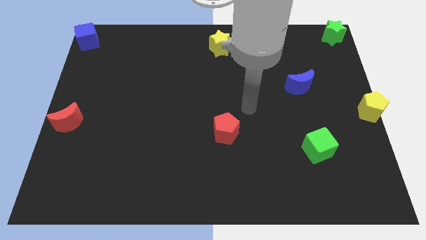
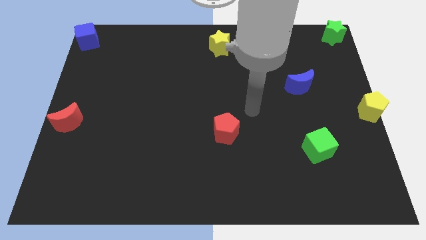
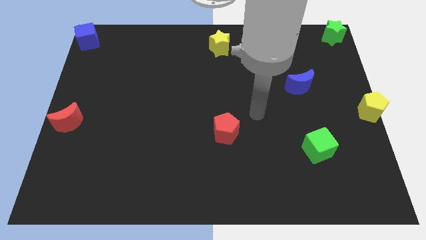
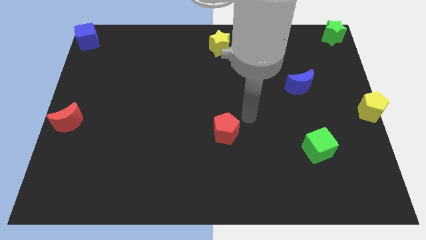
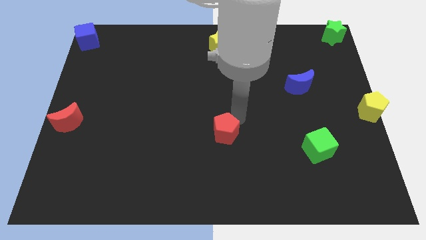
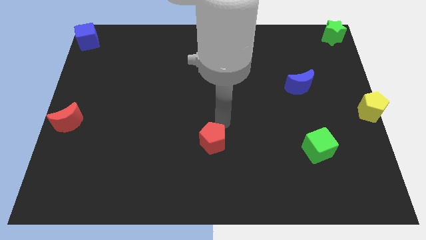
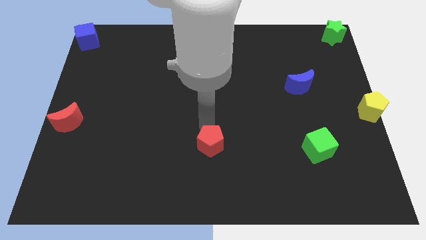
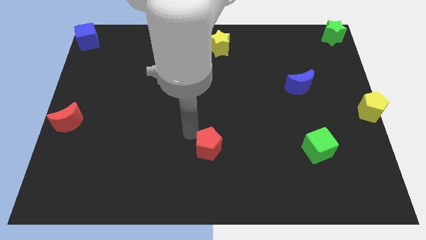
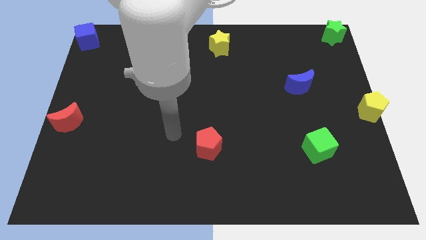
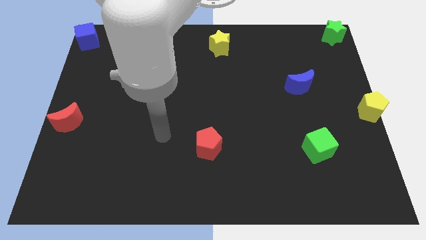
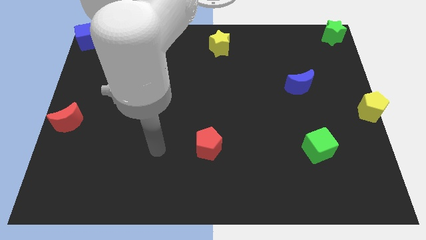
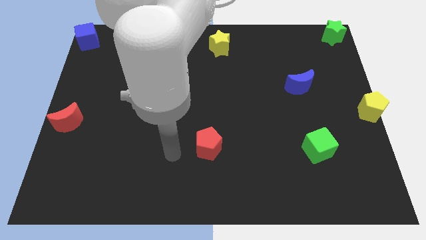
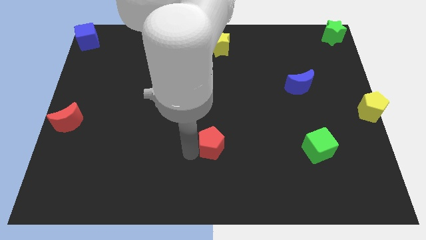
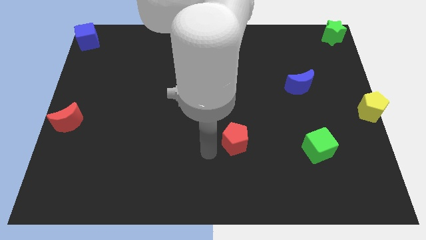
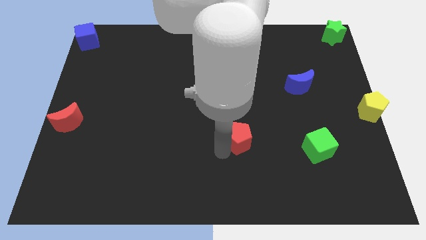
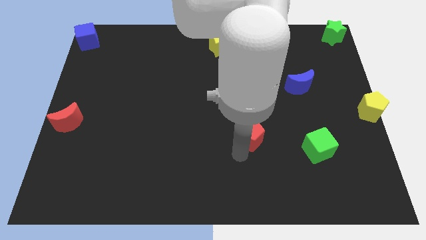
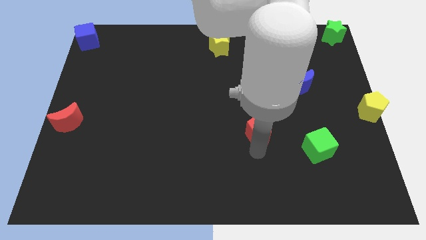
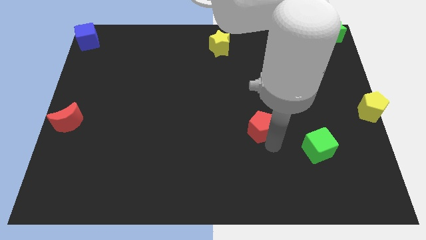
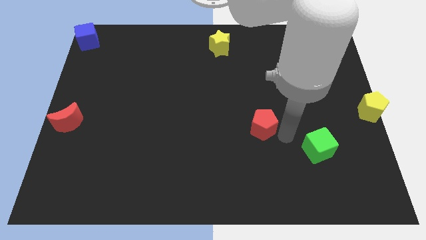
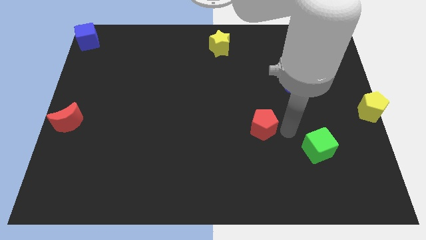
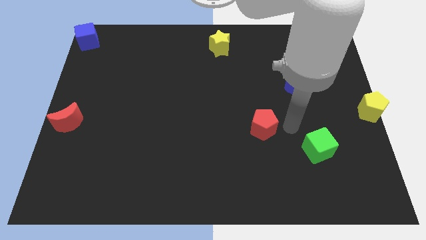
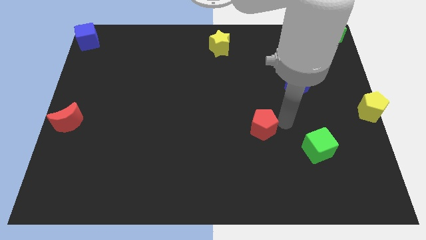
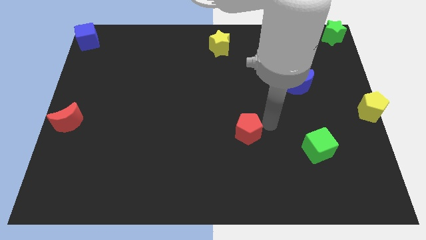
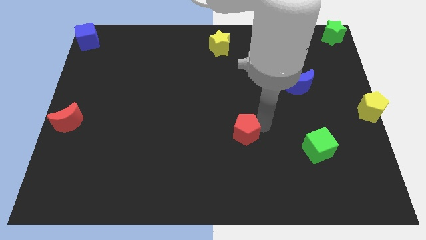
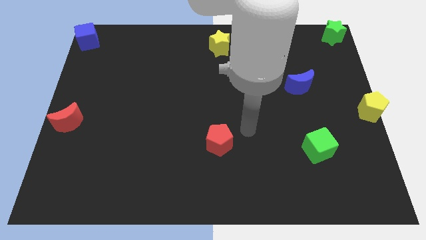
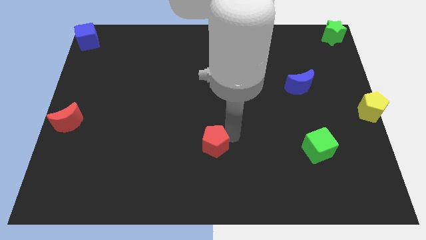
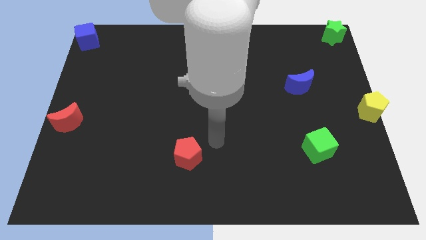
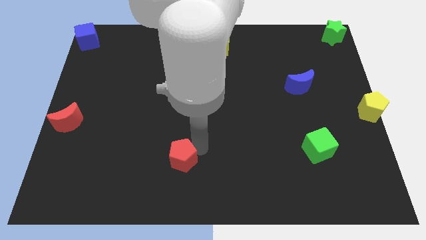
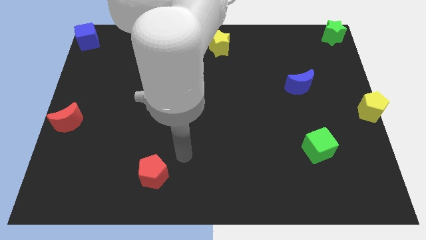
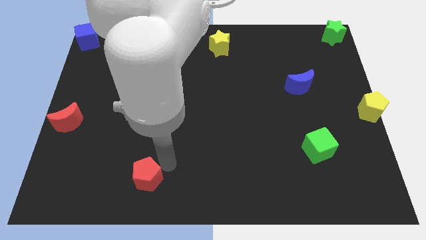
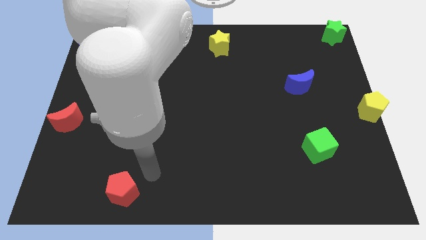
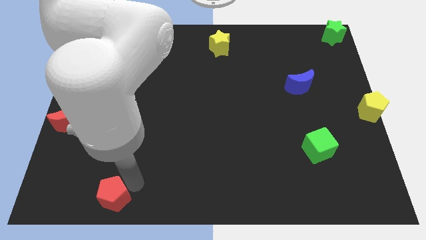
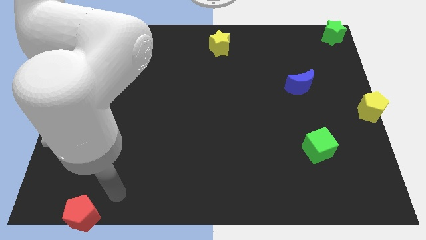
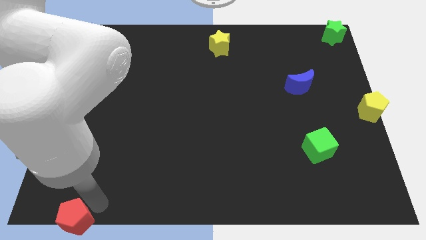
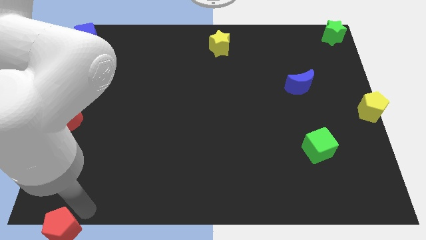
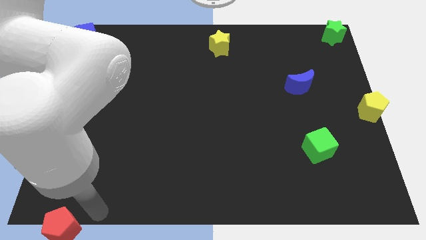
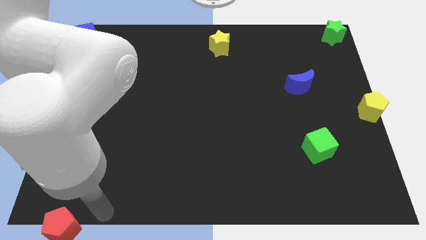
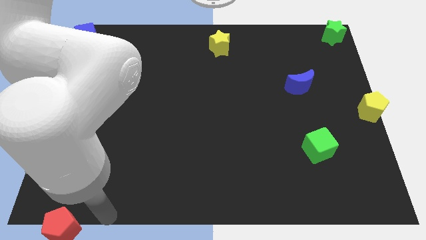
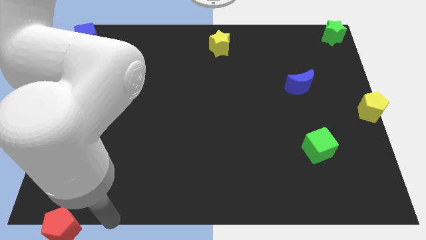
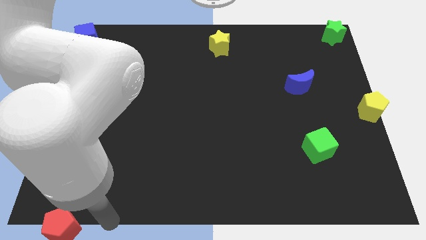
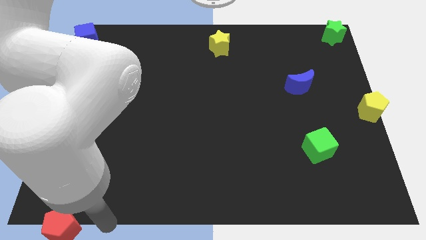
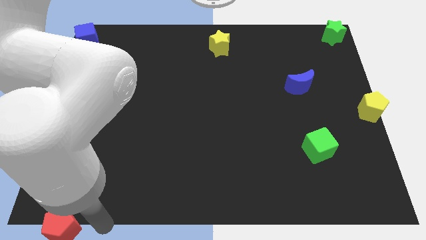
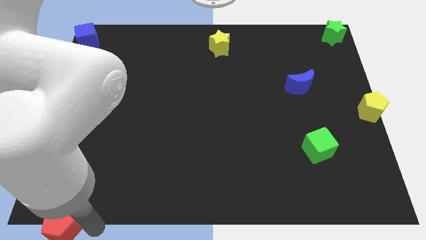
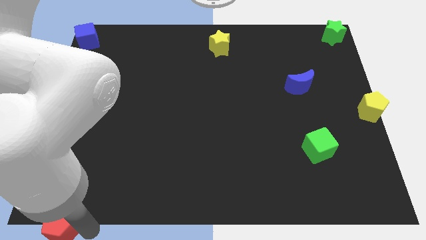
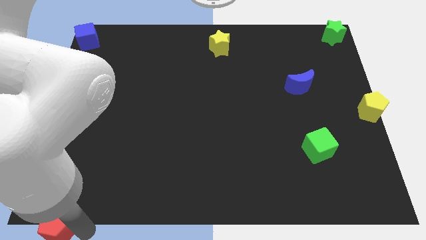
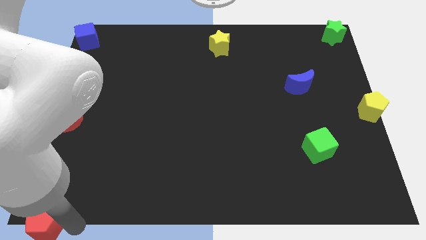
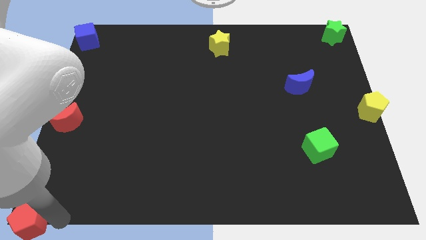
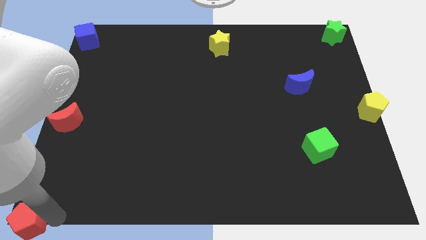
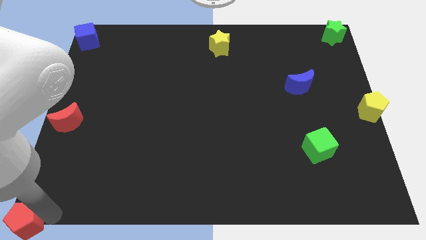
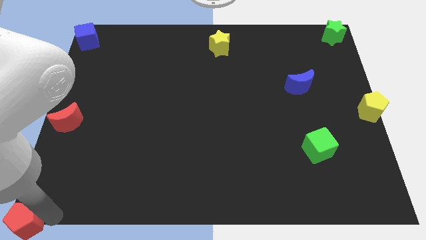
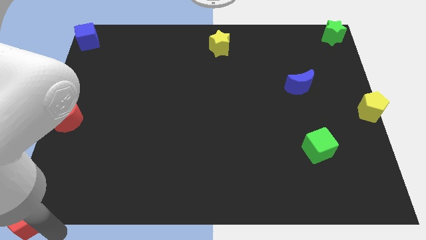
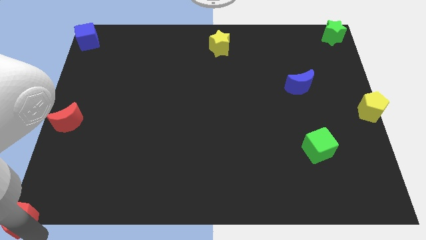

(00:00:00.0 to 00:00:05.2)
place the red pentagon to the bottom left corner of the board

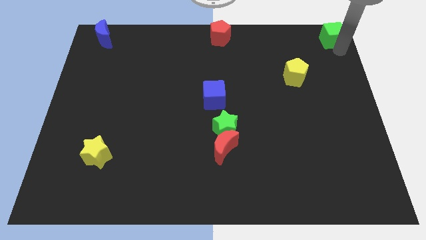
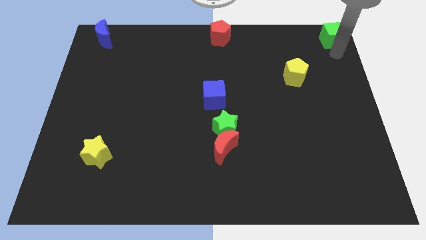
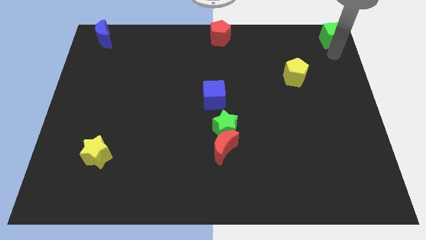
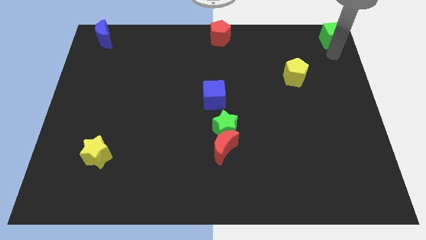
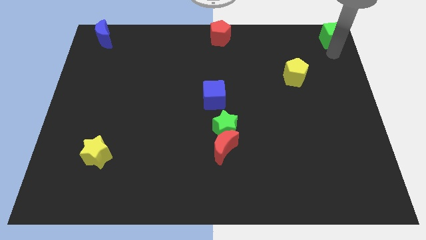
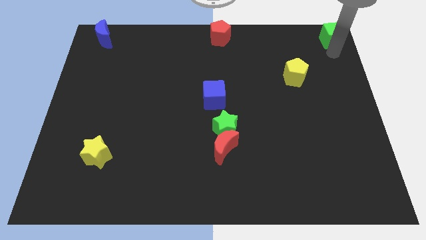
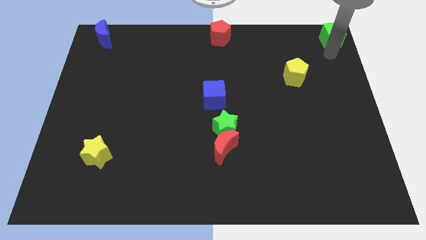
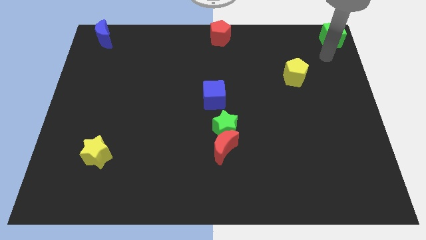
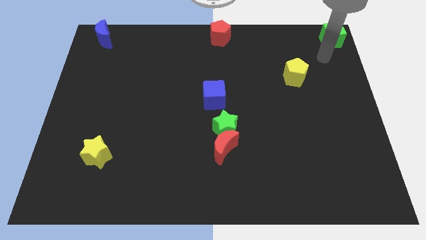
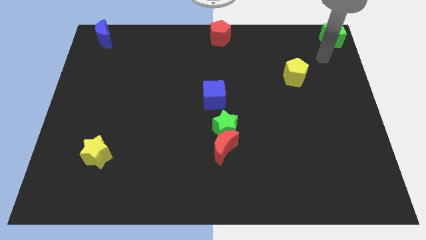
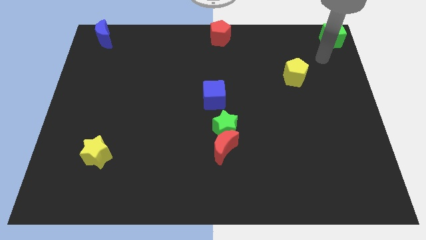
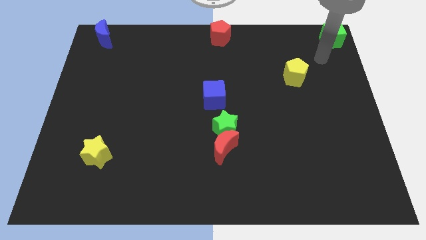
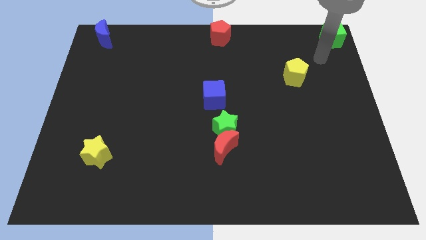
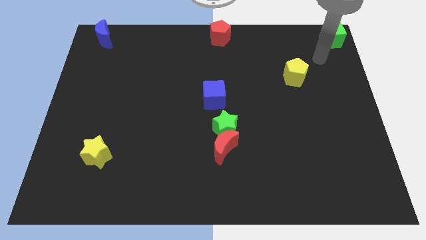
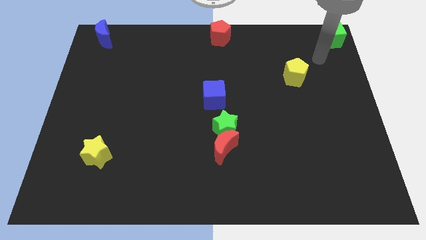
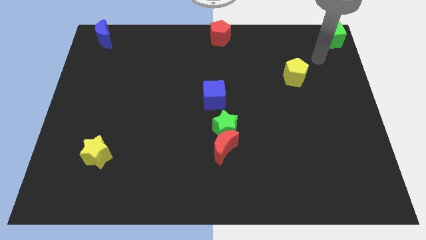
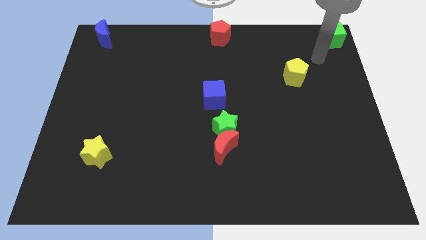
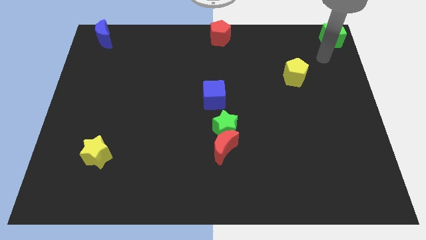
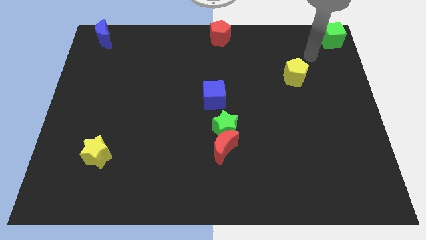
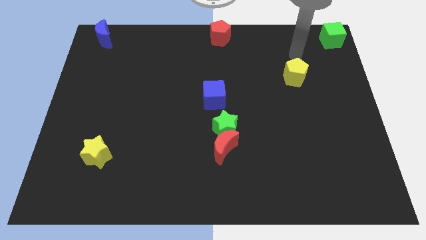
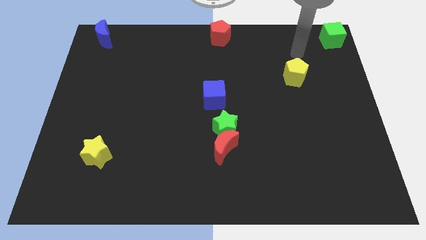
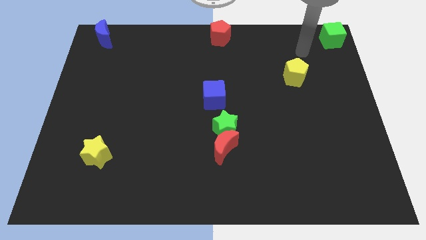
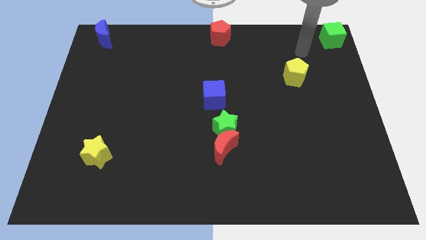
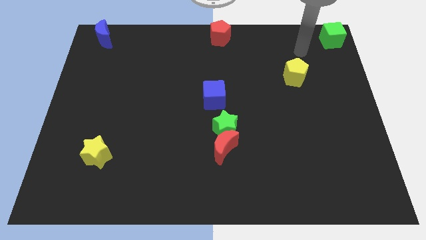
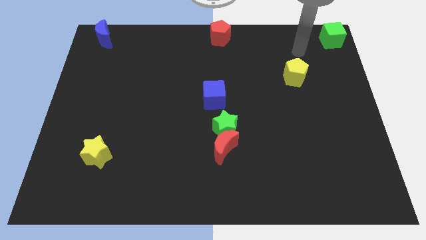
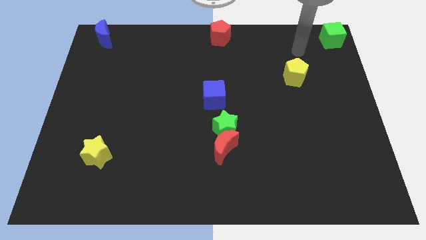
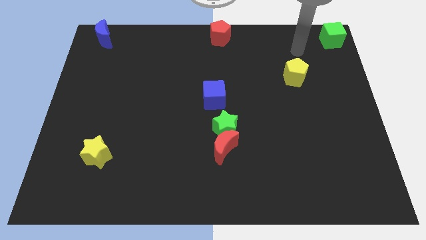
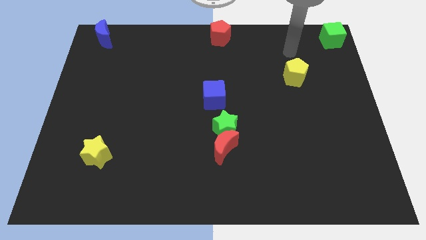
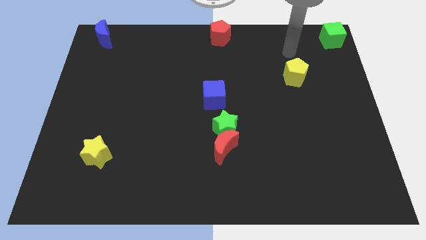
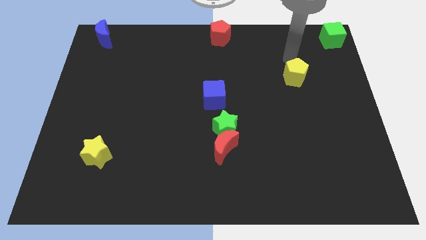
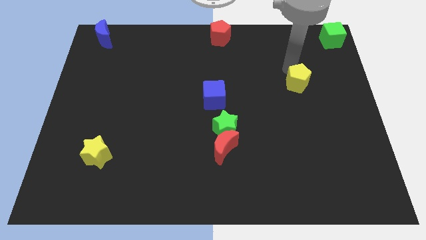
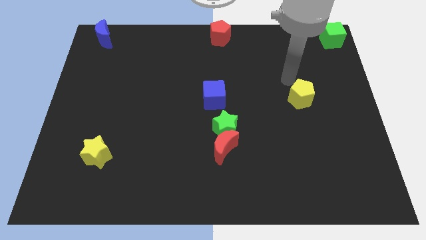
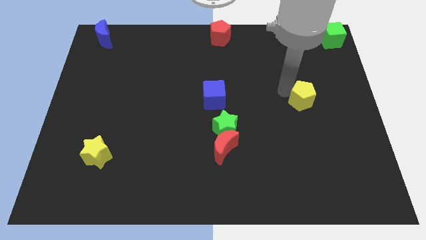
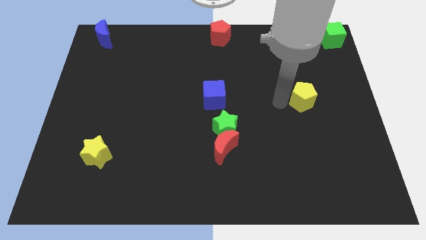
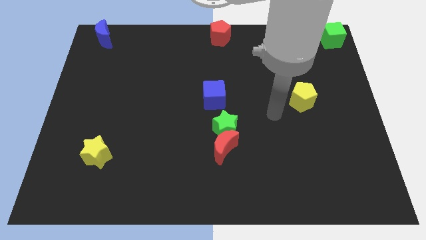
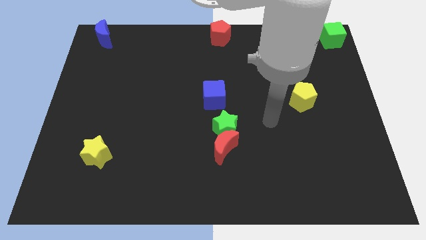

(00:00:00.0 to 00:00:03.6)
slightly move the yellow pentagon towards down

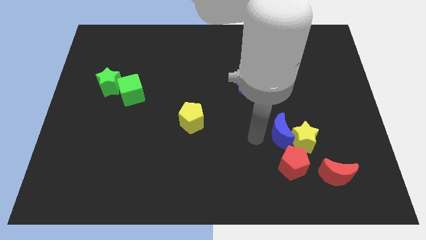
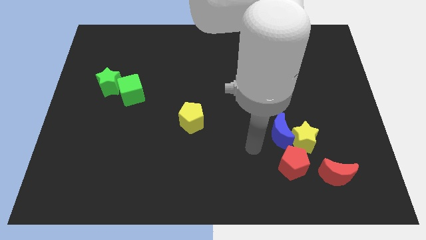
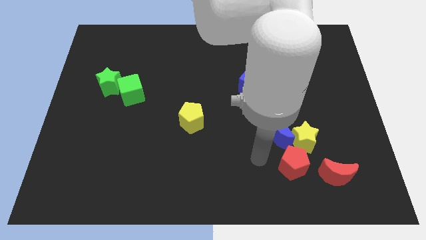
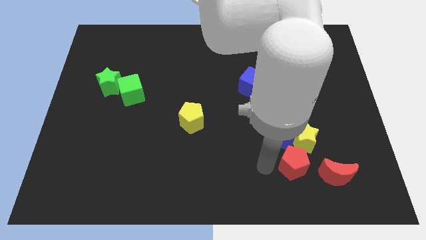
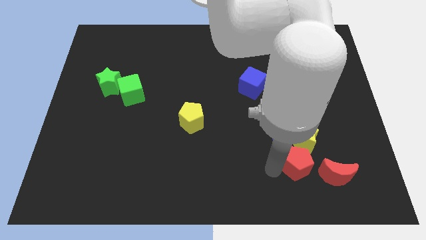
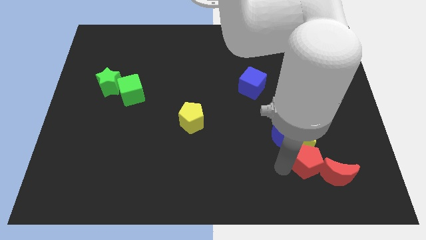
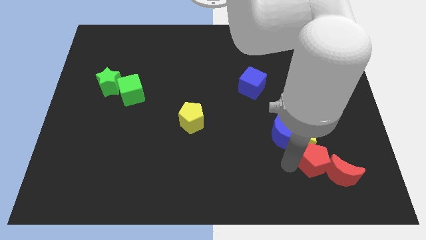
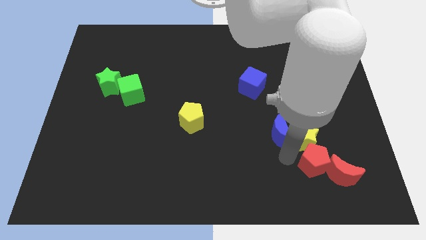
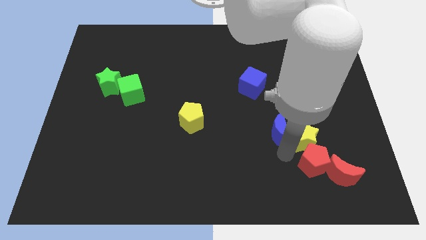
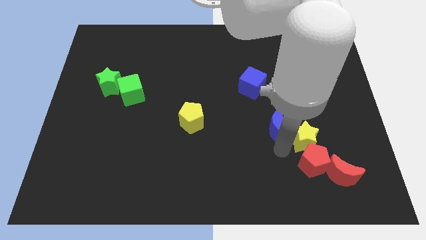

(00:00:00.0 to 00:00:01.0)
move the red pentagon to the bottom of the yellow star
